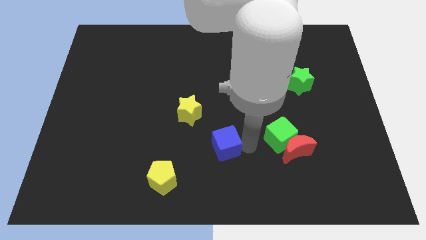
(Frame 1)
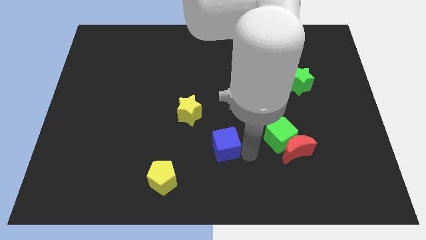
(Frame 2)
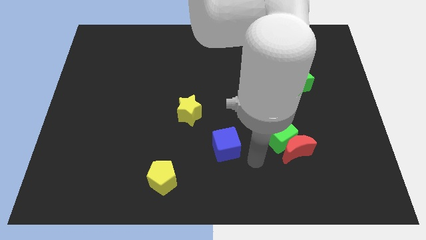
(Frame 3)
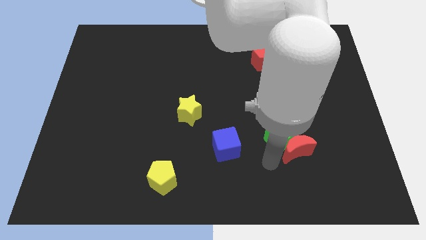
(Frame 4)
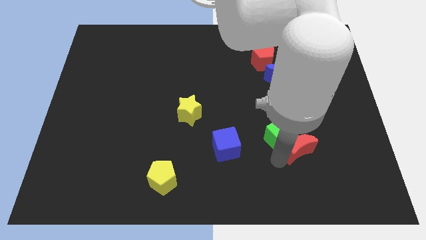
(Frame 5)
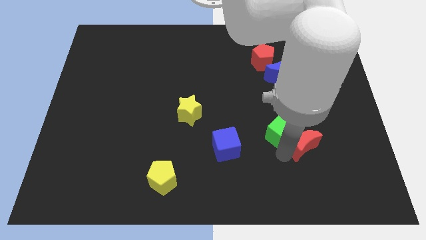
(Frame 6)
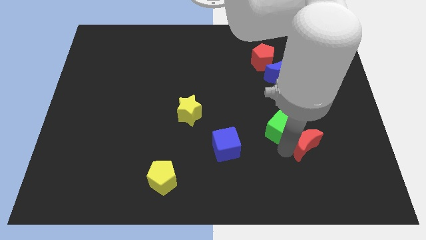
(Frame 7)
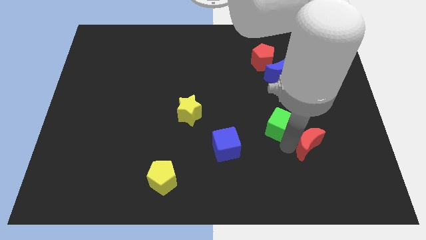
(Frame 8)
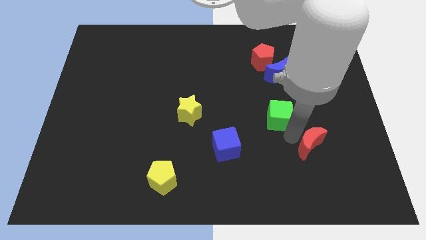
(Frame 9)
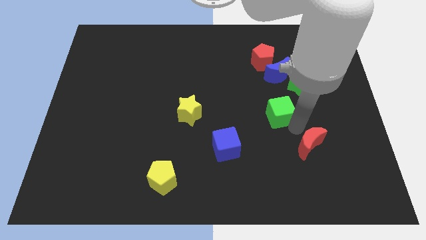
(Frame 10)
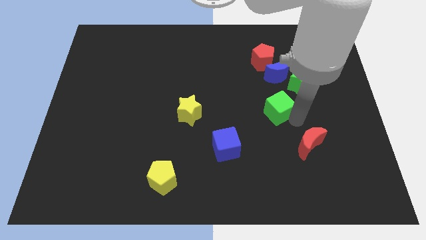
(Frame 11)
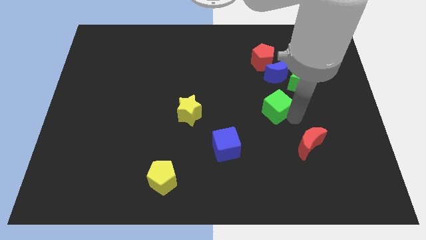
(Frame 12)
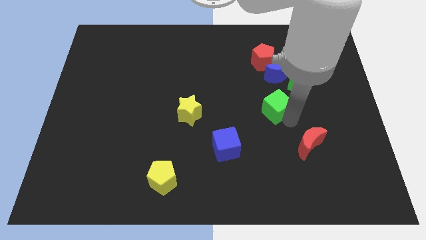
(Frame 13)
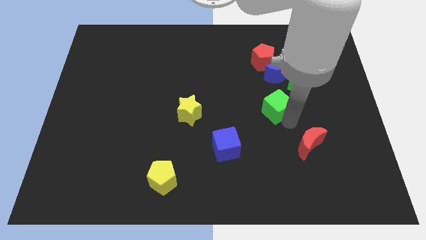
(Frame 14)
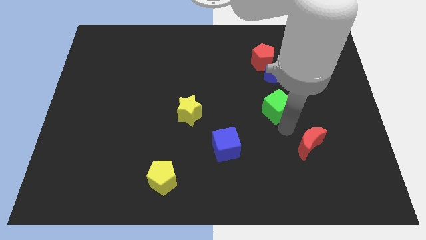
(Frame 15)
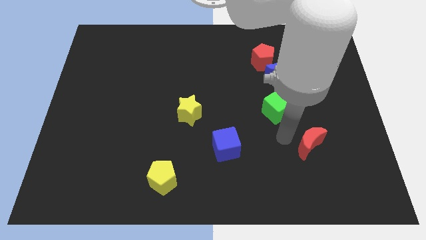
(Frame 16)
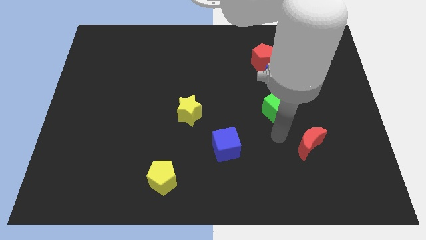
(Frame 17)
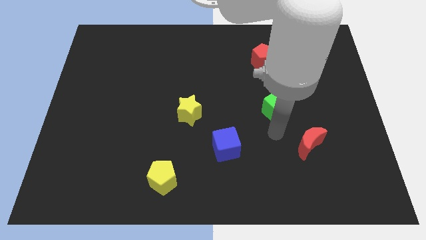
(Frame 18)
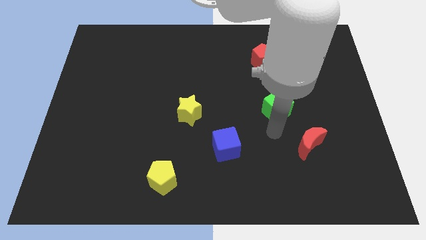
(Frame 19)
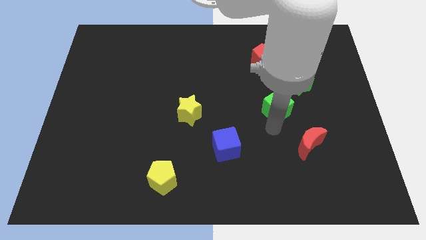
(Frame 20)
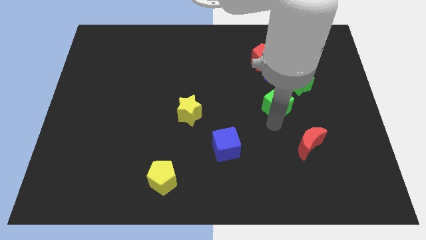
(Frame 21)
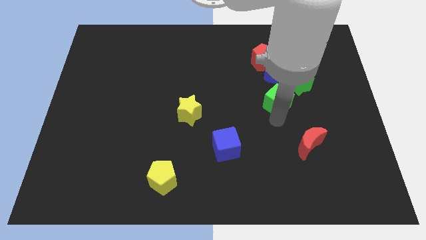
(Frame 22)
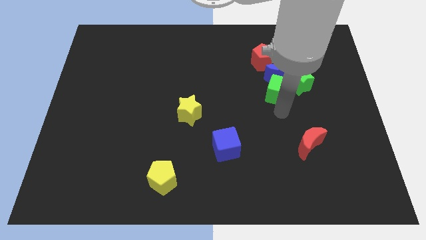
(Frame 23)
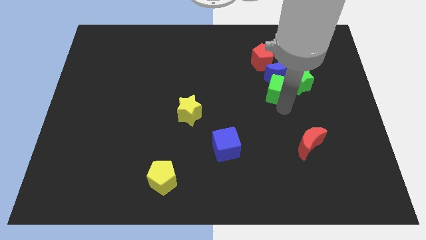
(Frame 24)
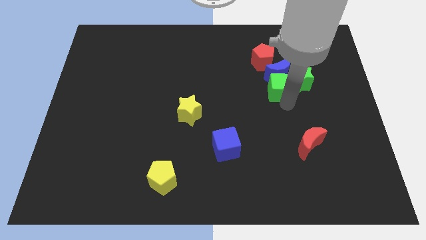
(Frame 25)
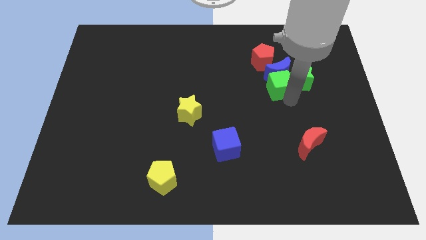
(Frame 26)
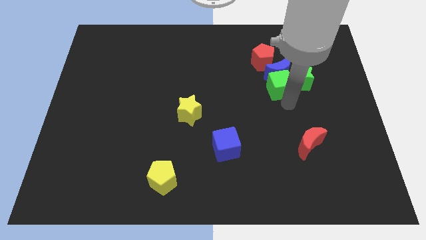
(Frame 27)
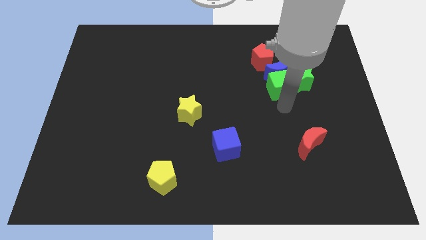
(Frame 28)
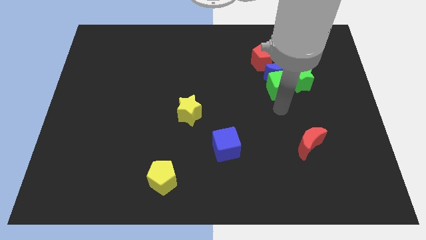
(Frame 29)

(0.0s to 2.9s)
separate the green cube from the red crescent

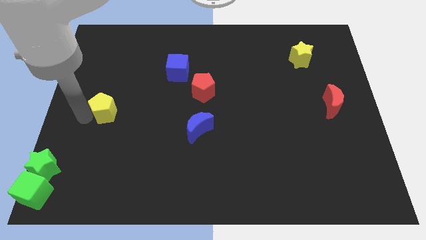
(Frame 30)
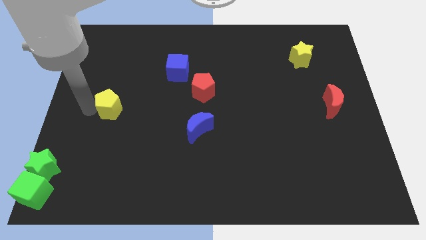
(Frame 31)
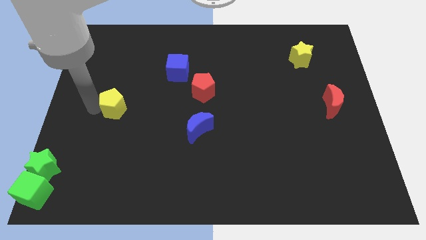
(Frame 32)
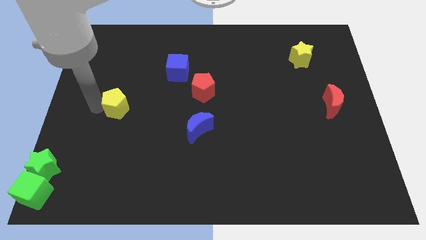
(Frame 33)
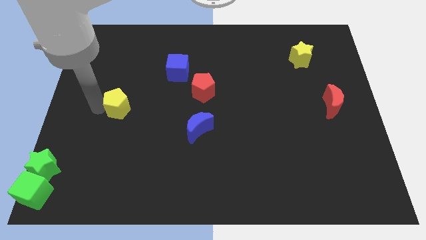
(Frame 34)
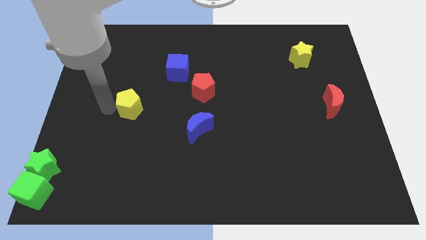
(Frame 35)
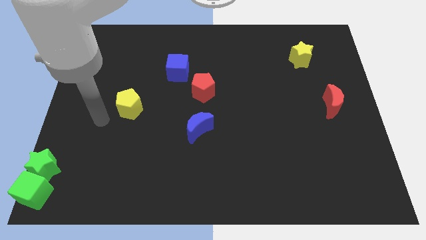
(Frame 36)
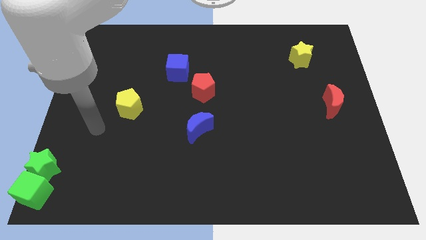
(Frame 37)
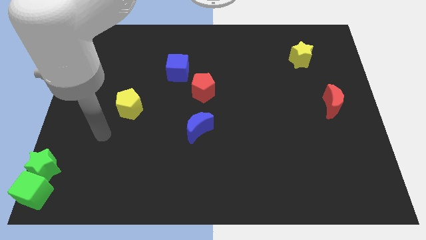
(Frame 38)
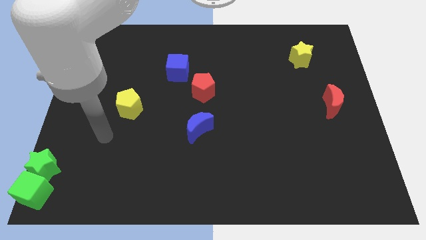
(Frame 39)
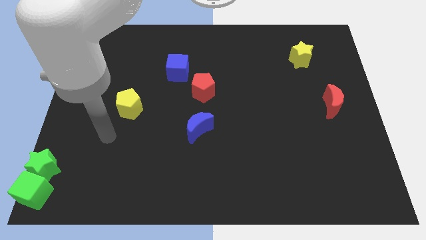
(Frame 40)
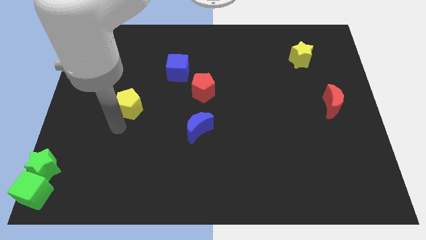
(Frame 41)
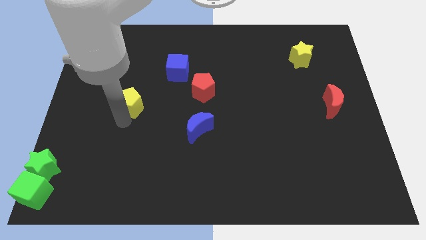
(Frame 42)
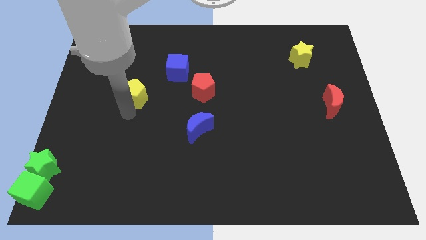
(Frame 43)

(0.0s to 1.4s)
move the yellow pentagon to the top of the board

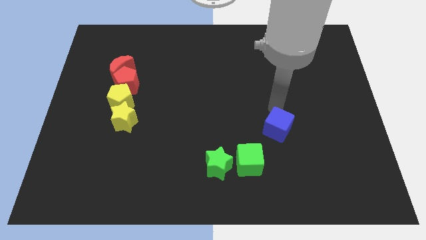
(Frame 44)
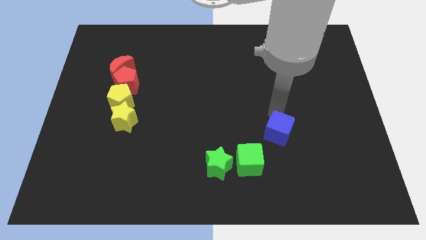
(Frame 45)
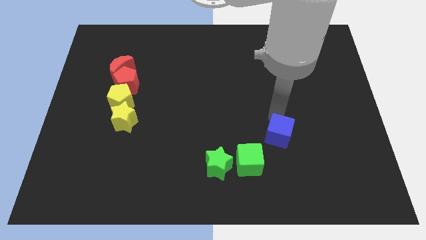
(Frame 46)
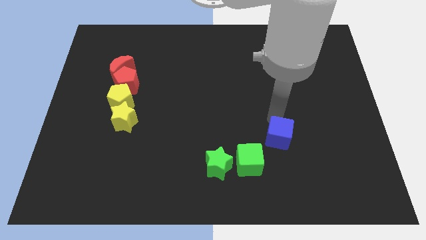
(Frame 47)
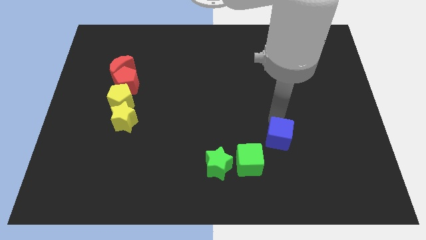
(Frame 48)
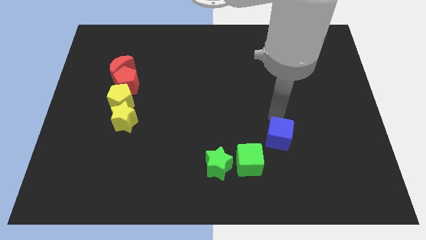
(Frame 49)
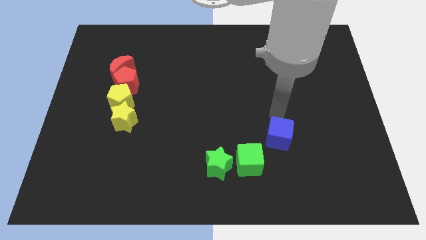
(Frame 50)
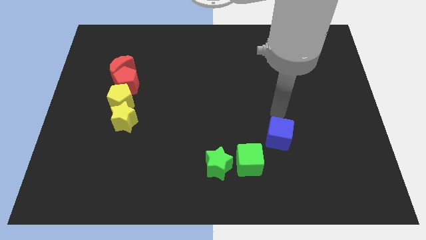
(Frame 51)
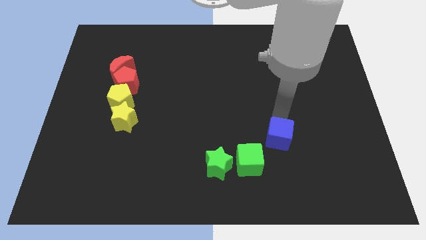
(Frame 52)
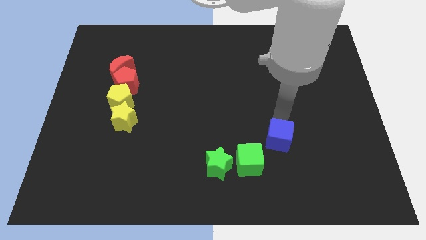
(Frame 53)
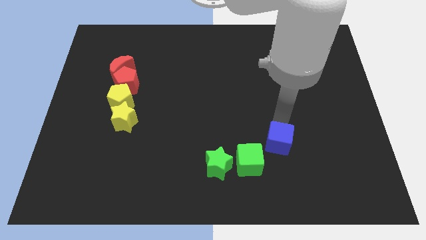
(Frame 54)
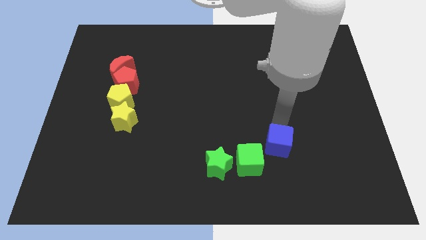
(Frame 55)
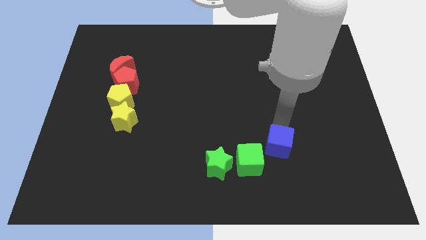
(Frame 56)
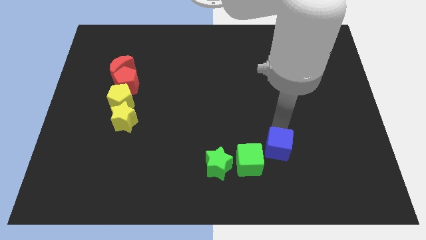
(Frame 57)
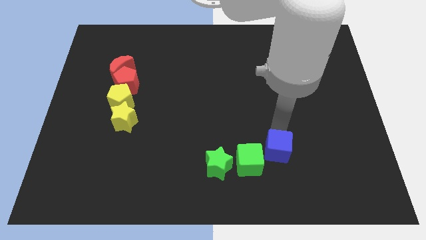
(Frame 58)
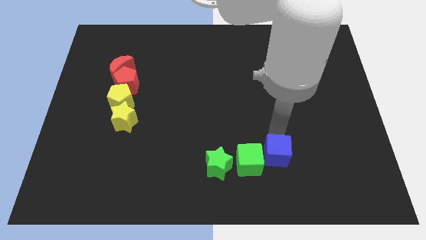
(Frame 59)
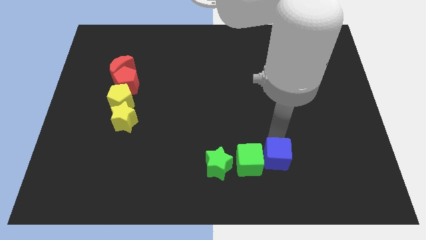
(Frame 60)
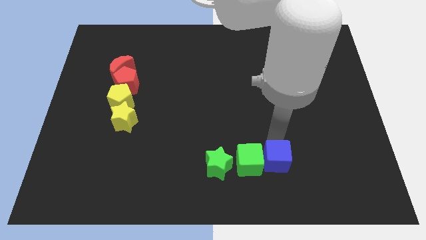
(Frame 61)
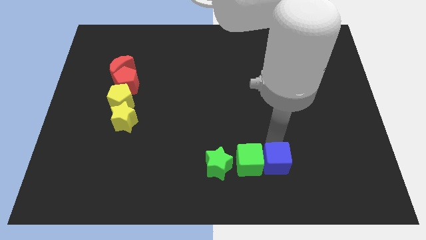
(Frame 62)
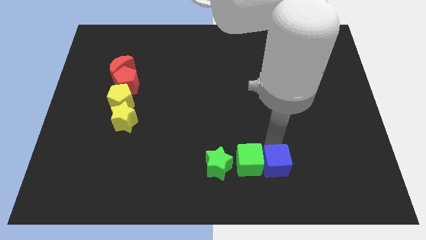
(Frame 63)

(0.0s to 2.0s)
place blue cube beside green cube

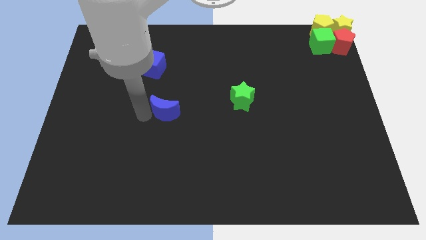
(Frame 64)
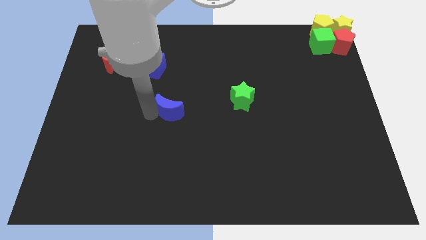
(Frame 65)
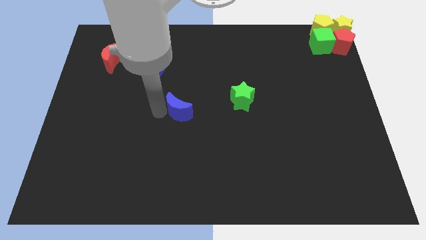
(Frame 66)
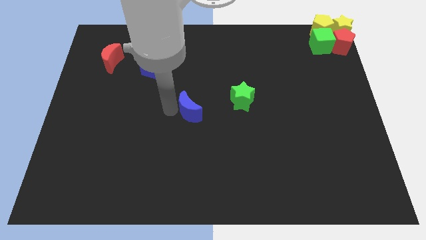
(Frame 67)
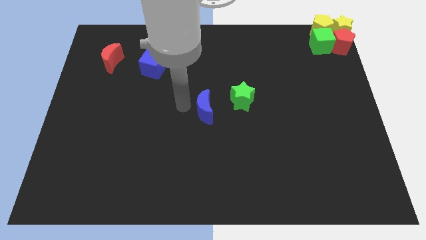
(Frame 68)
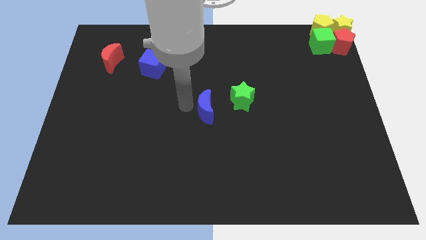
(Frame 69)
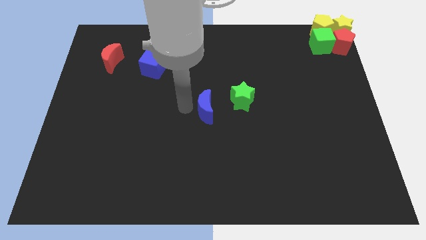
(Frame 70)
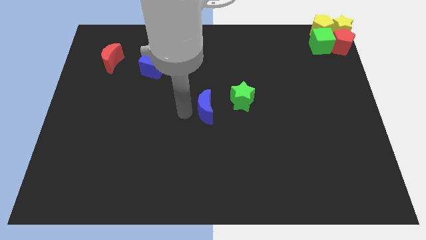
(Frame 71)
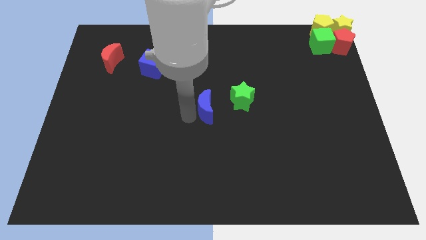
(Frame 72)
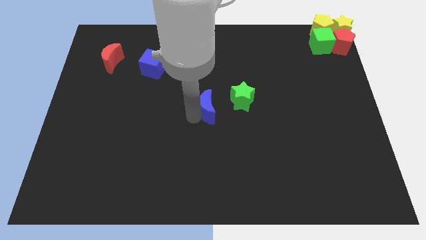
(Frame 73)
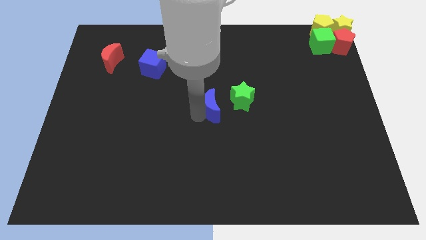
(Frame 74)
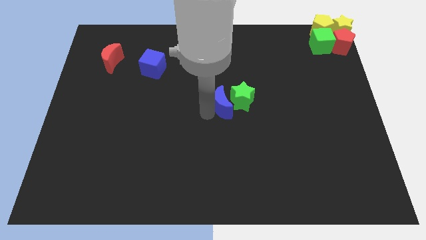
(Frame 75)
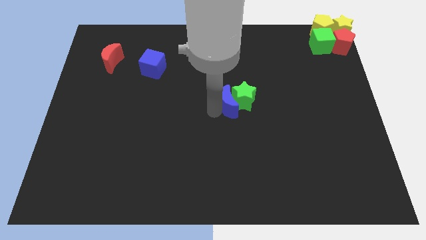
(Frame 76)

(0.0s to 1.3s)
push the blue crescent into the green star

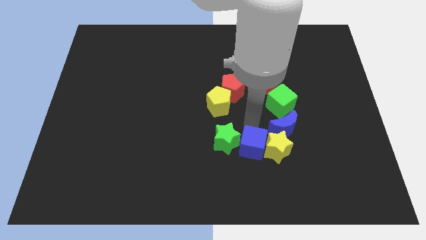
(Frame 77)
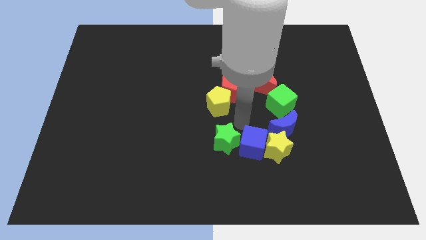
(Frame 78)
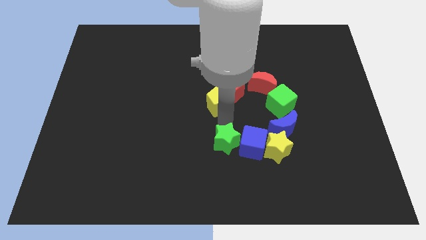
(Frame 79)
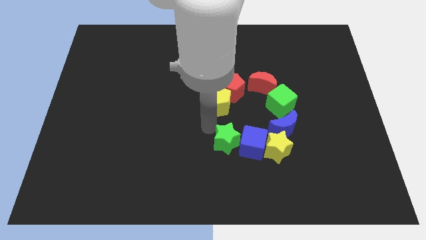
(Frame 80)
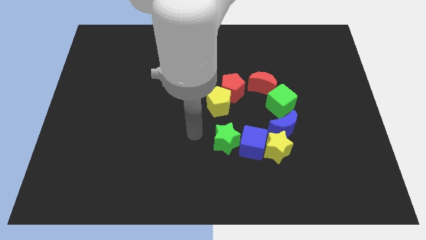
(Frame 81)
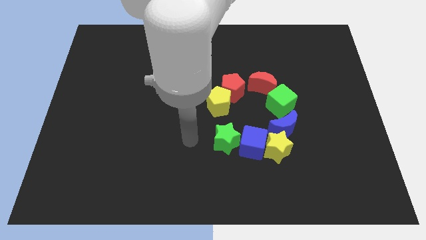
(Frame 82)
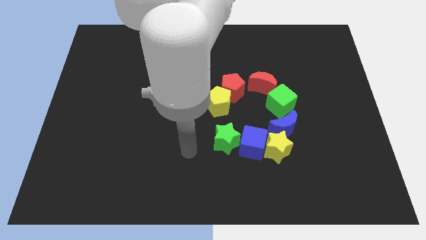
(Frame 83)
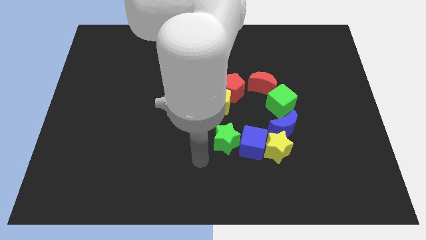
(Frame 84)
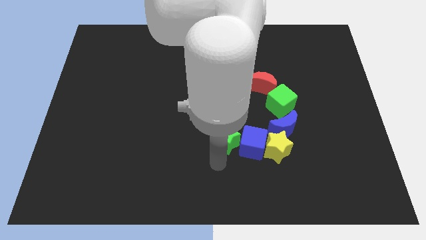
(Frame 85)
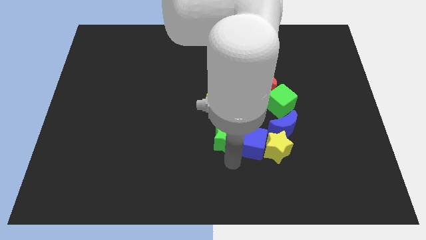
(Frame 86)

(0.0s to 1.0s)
move the arm below the green star

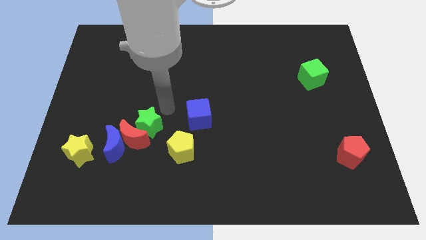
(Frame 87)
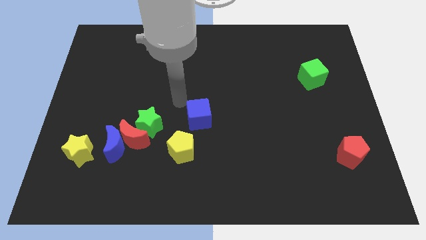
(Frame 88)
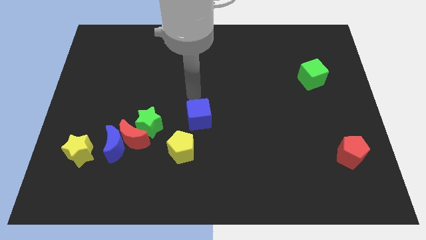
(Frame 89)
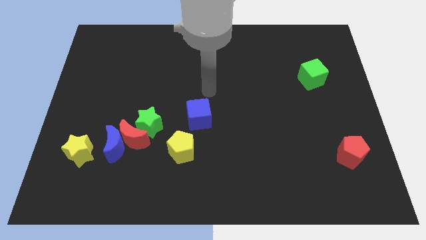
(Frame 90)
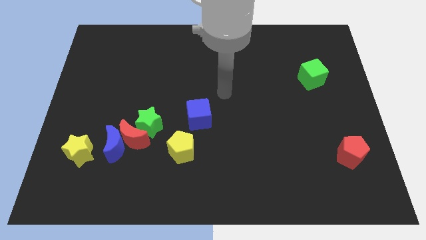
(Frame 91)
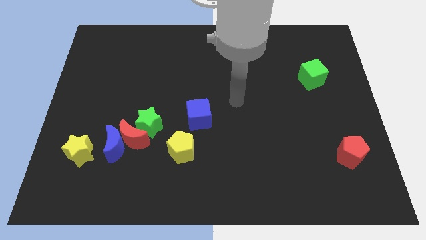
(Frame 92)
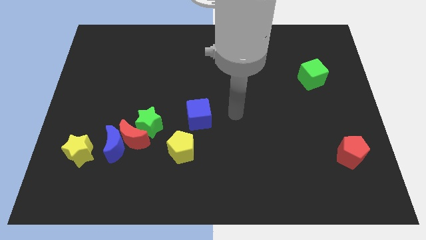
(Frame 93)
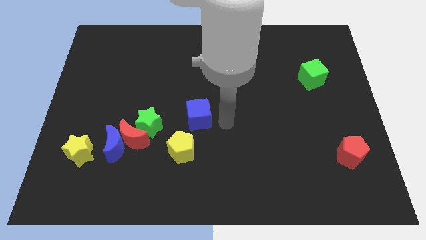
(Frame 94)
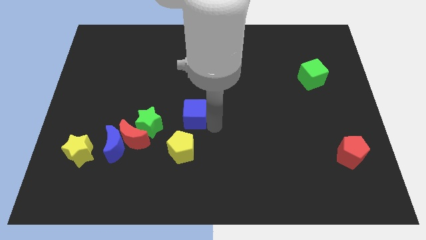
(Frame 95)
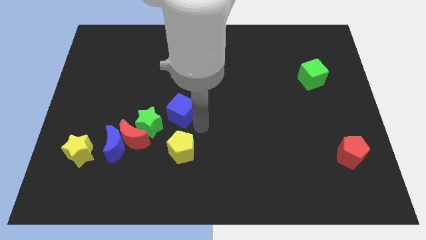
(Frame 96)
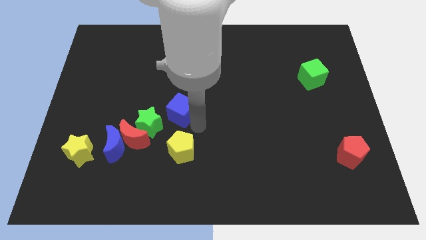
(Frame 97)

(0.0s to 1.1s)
move blue cube on top of yellow pentagon
